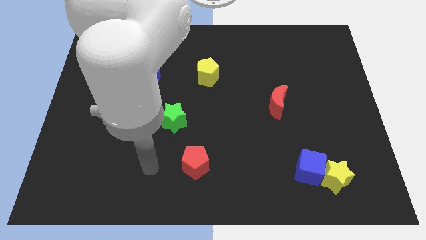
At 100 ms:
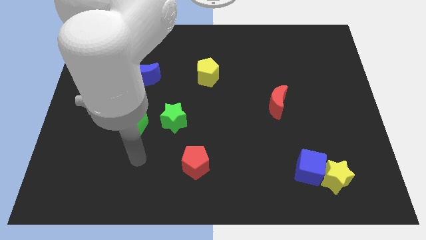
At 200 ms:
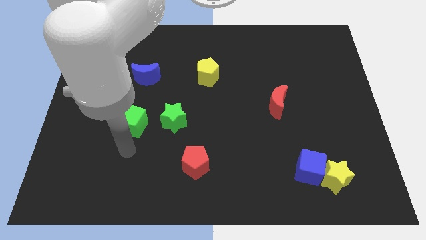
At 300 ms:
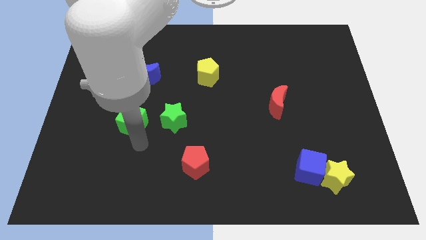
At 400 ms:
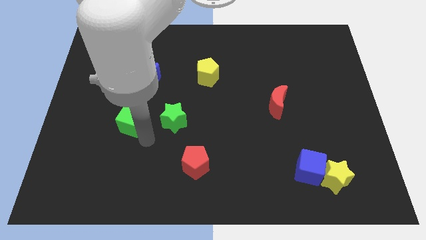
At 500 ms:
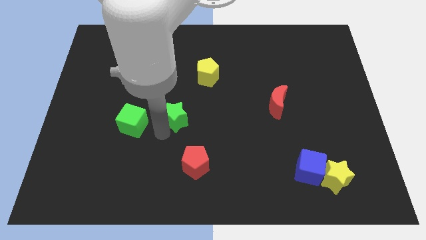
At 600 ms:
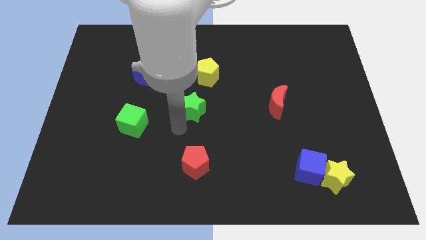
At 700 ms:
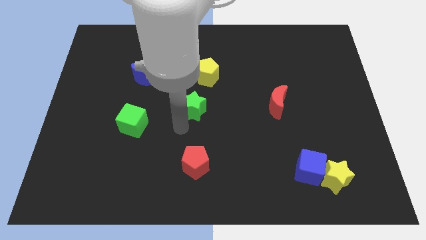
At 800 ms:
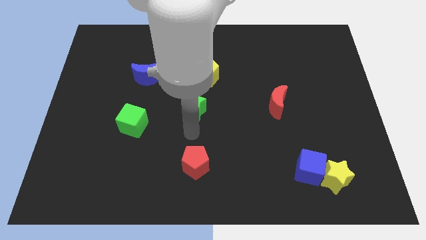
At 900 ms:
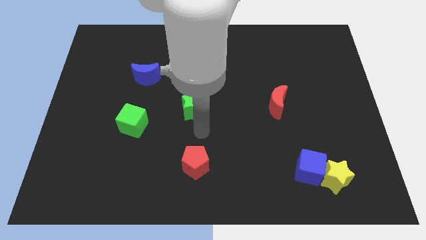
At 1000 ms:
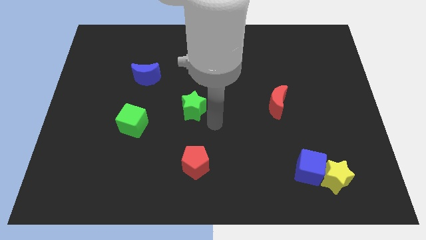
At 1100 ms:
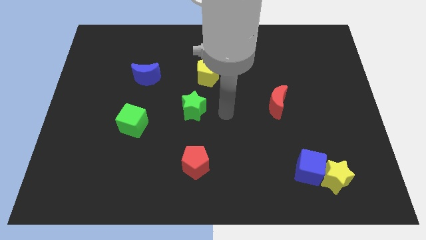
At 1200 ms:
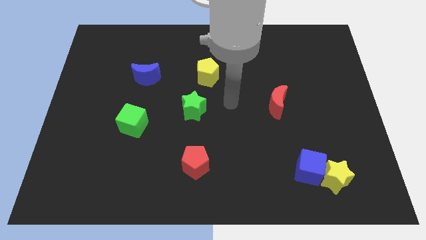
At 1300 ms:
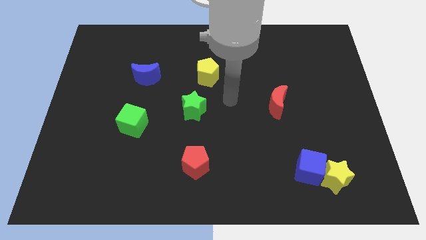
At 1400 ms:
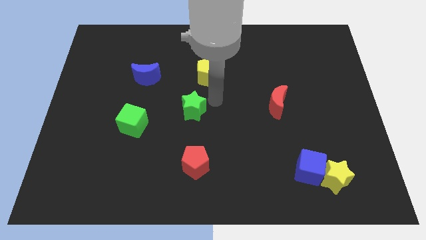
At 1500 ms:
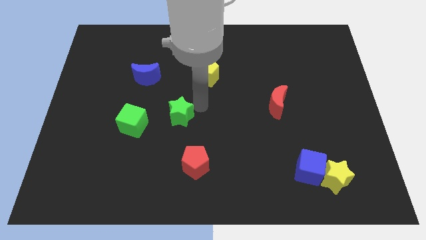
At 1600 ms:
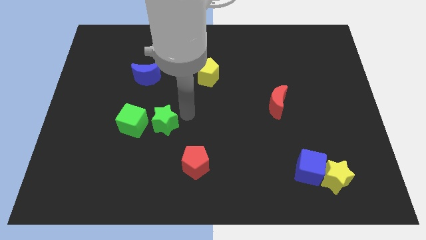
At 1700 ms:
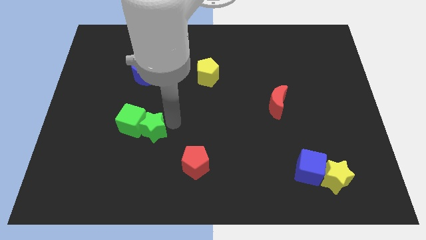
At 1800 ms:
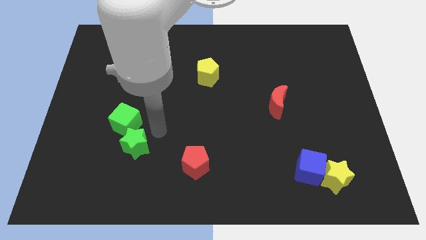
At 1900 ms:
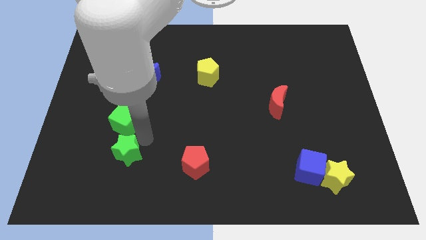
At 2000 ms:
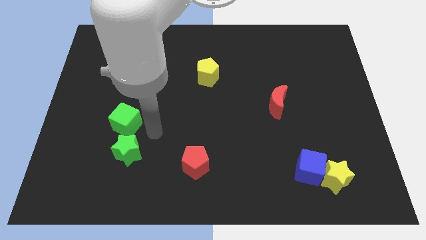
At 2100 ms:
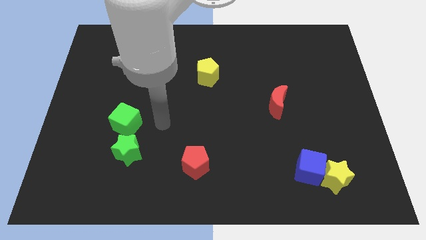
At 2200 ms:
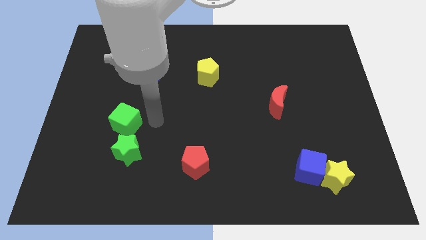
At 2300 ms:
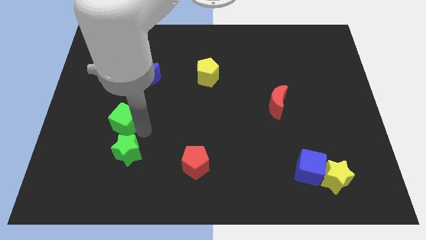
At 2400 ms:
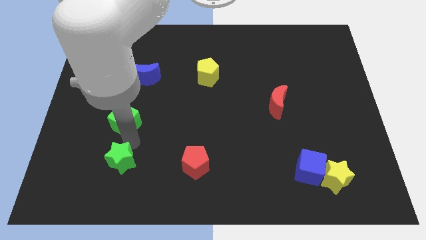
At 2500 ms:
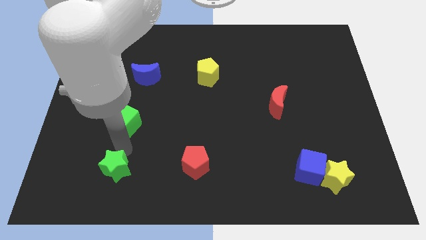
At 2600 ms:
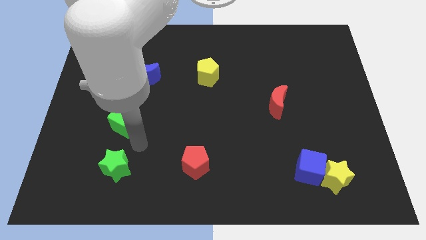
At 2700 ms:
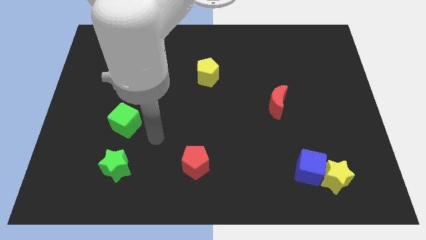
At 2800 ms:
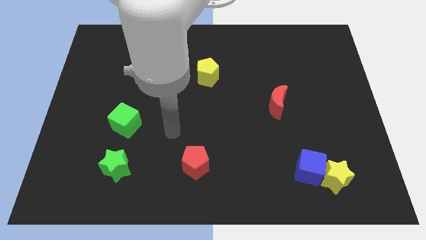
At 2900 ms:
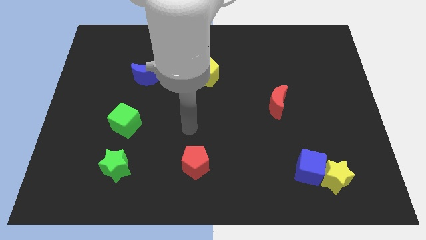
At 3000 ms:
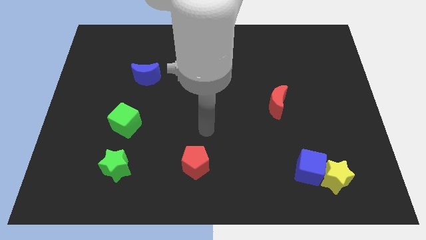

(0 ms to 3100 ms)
push the green star below the green cube

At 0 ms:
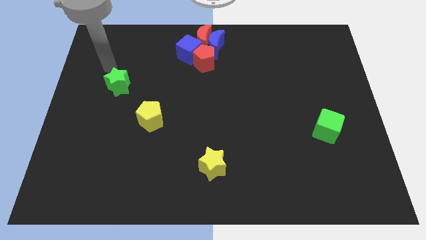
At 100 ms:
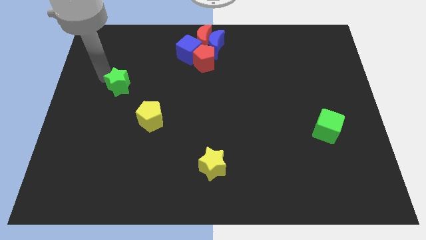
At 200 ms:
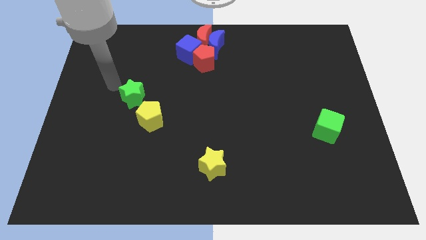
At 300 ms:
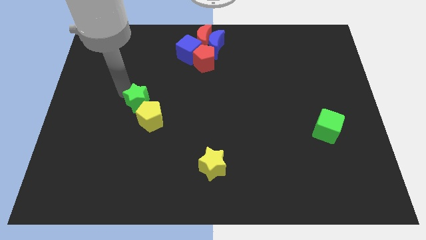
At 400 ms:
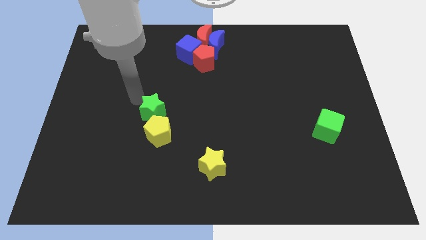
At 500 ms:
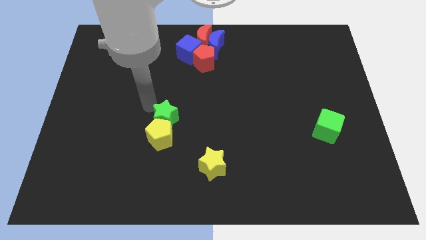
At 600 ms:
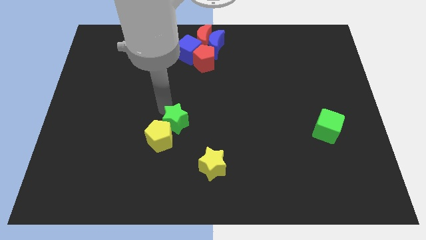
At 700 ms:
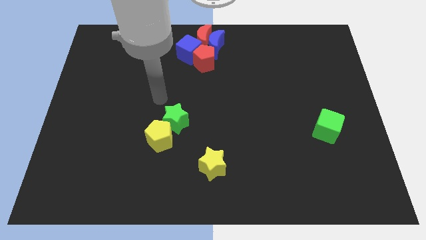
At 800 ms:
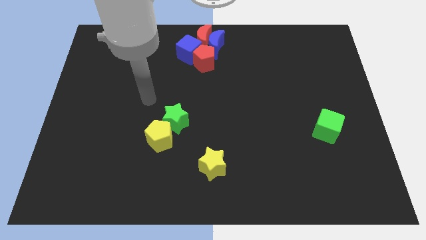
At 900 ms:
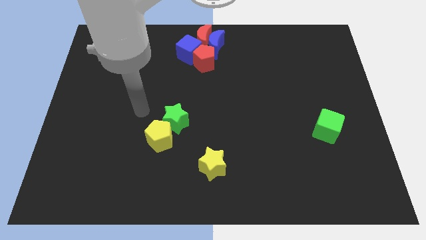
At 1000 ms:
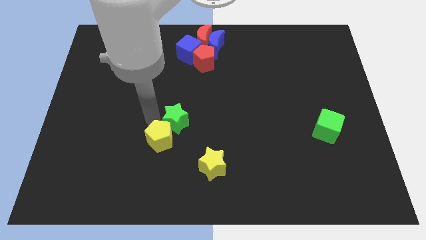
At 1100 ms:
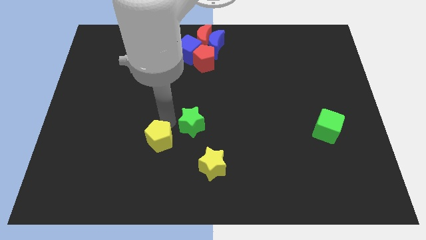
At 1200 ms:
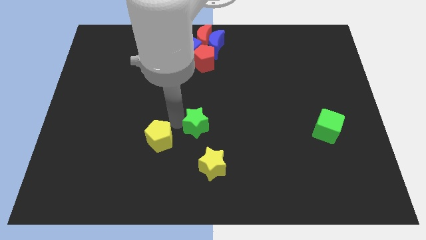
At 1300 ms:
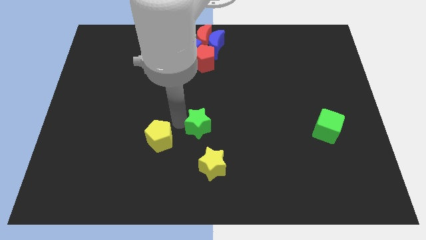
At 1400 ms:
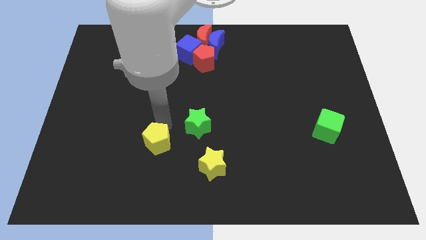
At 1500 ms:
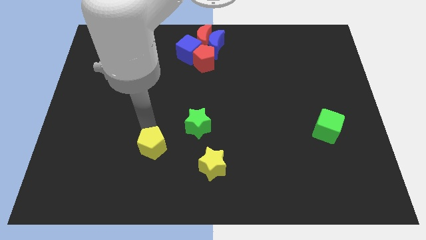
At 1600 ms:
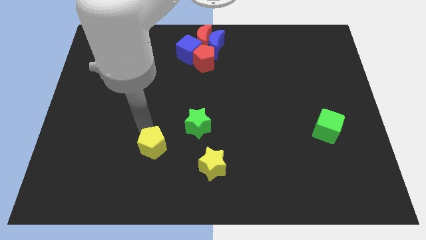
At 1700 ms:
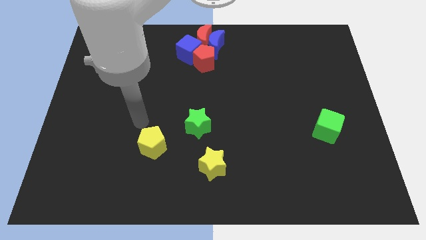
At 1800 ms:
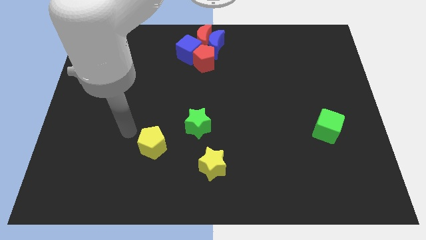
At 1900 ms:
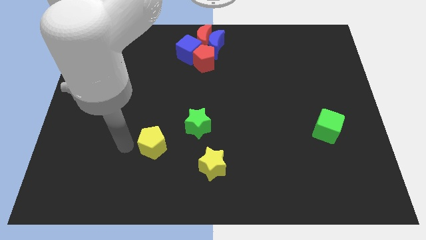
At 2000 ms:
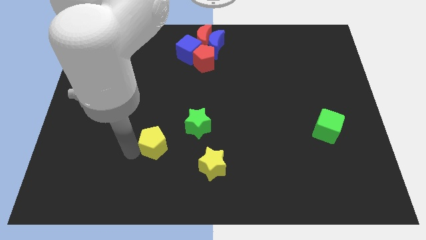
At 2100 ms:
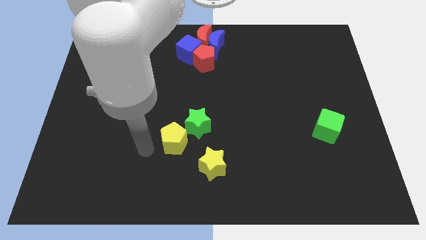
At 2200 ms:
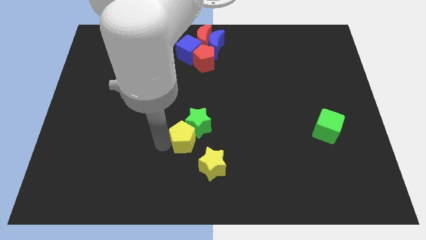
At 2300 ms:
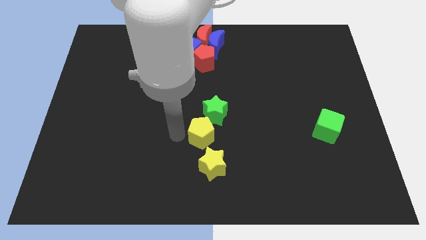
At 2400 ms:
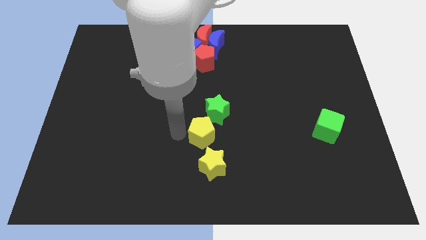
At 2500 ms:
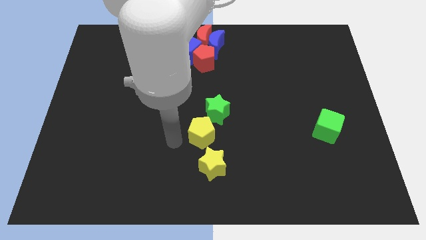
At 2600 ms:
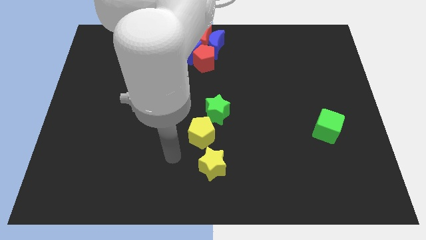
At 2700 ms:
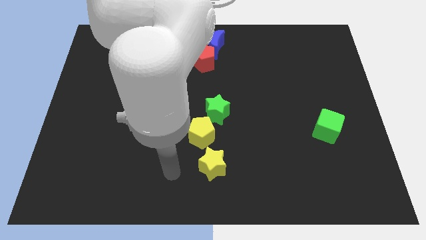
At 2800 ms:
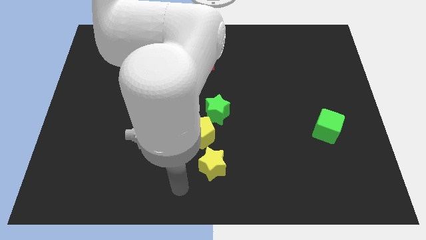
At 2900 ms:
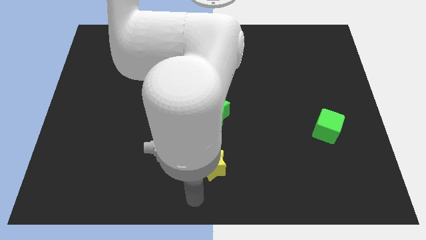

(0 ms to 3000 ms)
place the yellow pentagon to the top of the yellow star along with the green star

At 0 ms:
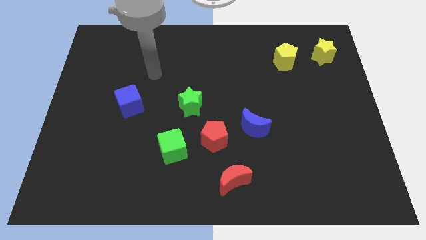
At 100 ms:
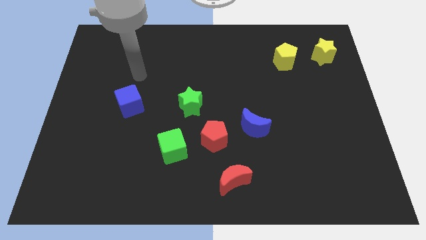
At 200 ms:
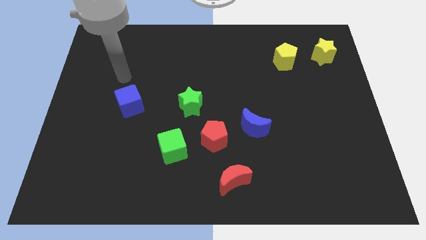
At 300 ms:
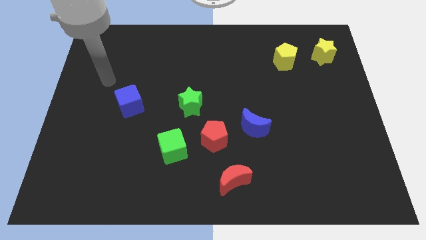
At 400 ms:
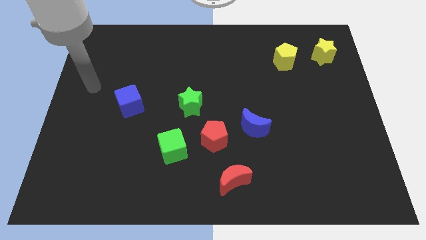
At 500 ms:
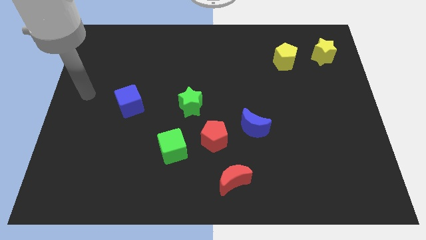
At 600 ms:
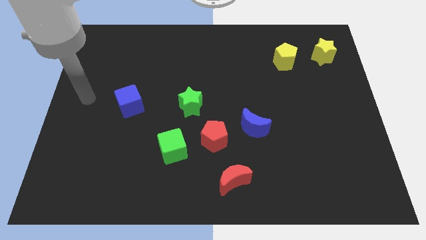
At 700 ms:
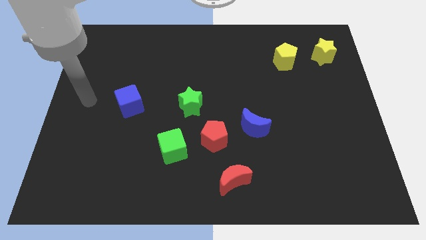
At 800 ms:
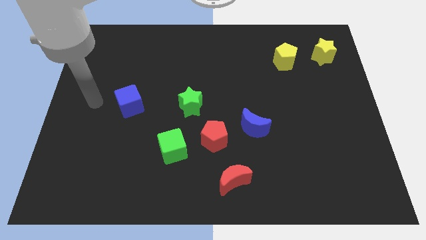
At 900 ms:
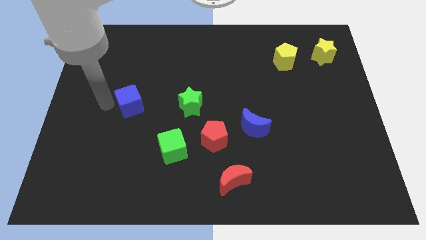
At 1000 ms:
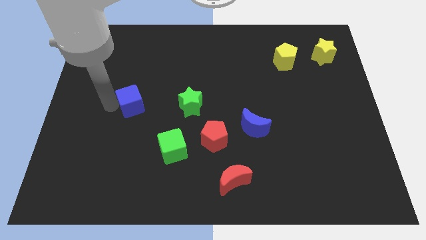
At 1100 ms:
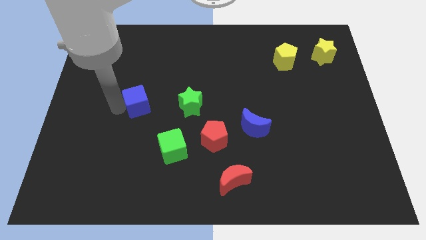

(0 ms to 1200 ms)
place the arm left to the blue cube

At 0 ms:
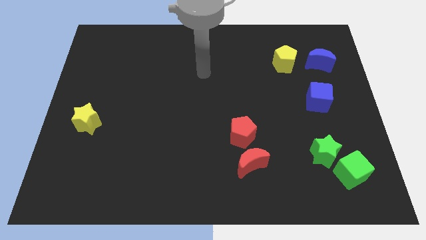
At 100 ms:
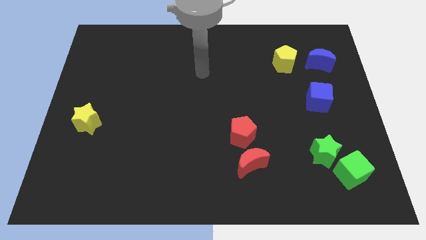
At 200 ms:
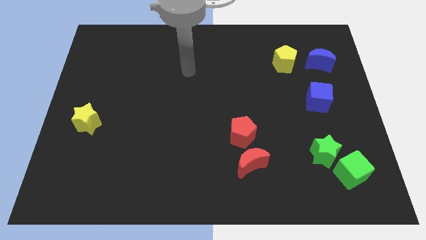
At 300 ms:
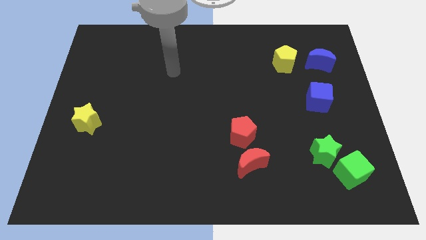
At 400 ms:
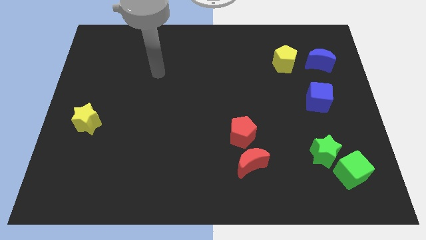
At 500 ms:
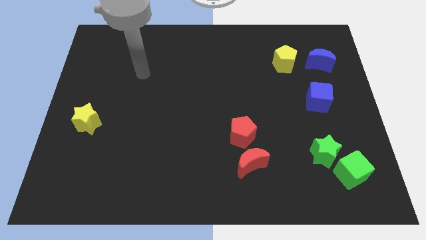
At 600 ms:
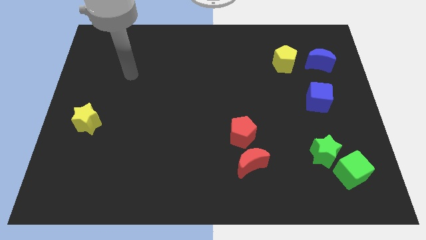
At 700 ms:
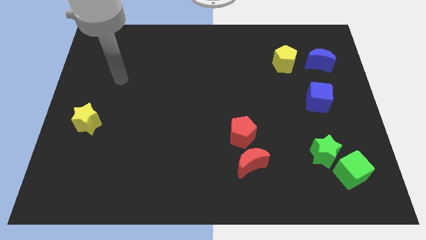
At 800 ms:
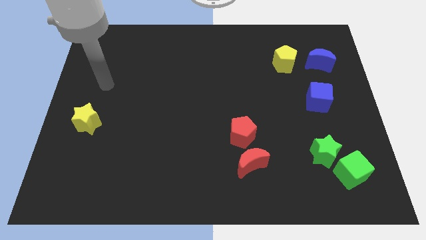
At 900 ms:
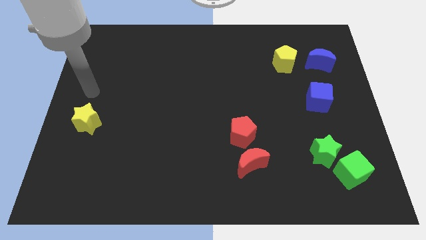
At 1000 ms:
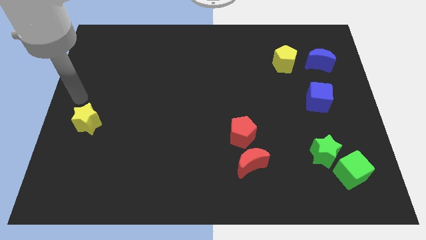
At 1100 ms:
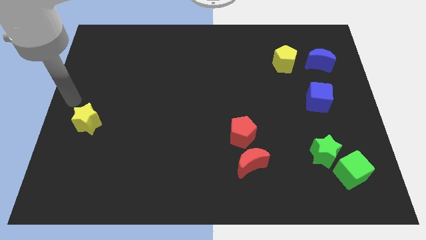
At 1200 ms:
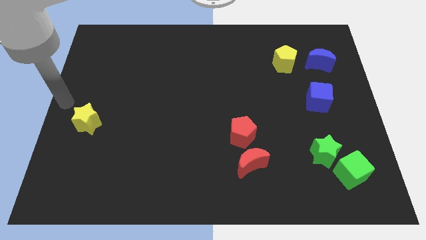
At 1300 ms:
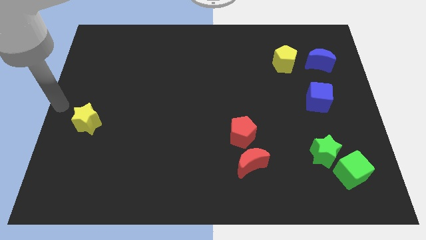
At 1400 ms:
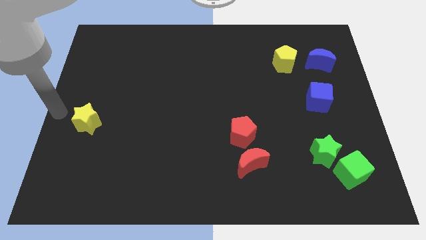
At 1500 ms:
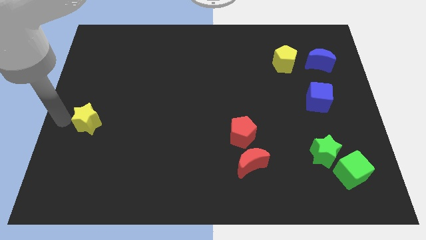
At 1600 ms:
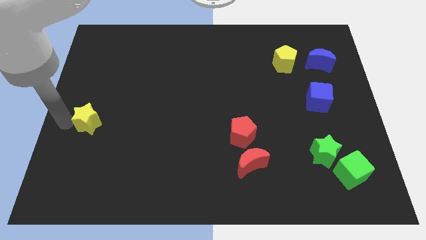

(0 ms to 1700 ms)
touch the yellow star with your arm

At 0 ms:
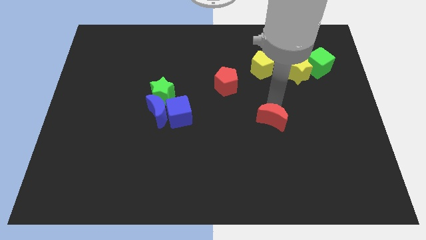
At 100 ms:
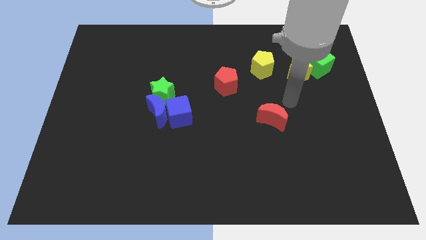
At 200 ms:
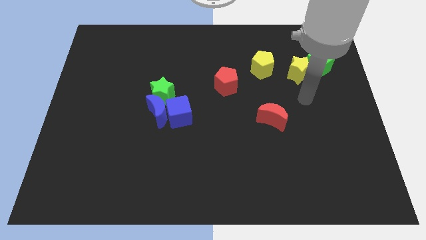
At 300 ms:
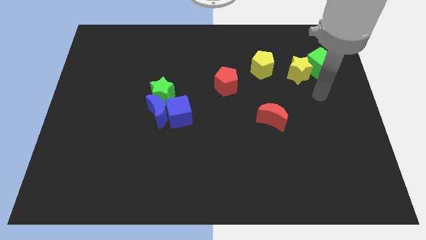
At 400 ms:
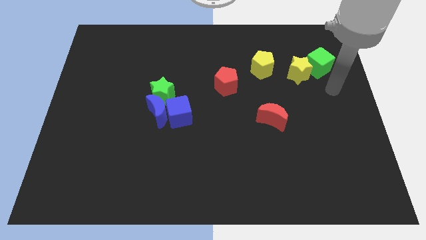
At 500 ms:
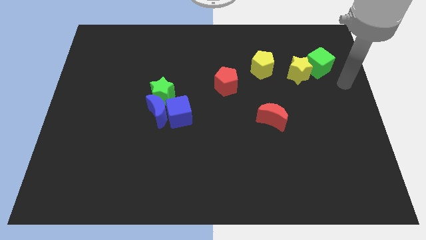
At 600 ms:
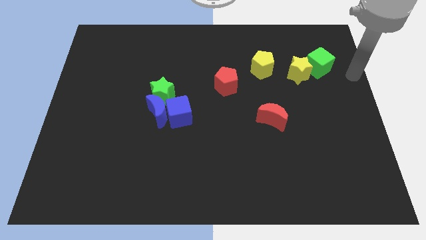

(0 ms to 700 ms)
move the arm away from the red moon
